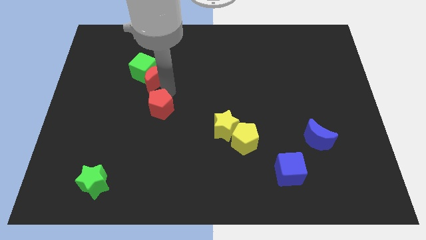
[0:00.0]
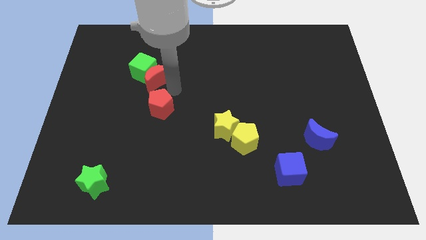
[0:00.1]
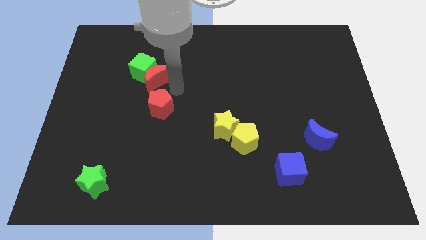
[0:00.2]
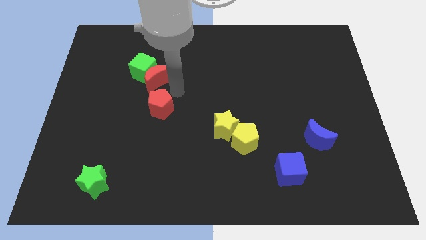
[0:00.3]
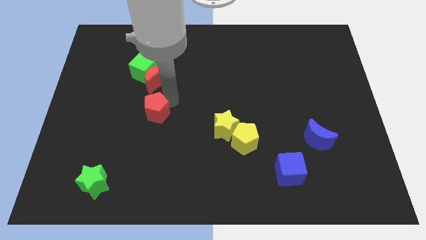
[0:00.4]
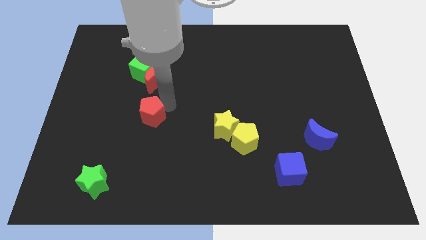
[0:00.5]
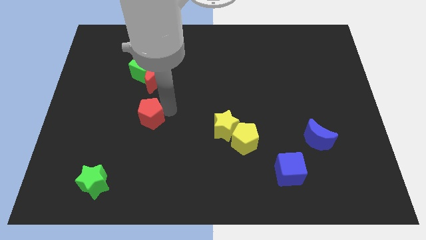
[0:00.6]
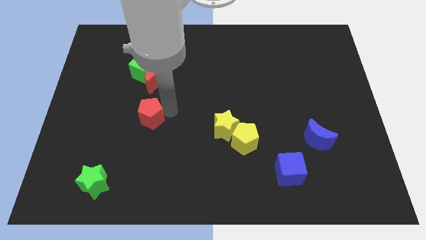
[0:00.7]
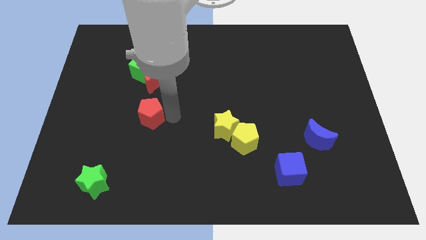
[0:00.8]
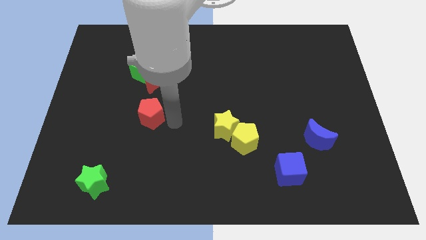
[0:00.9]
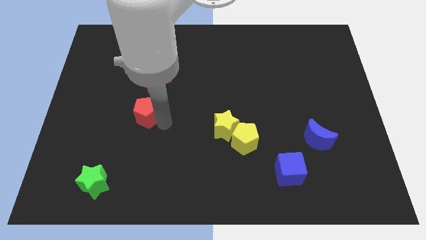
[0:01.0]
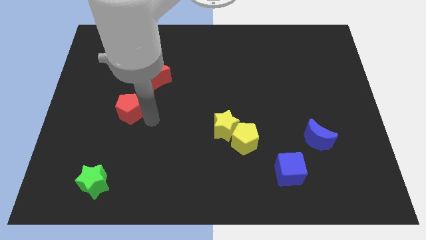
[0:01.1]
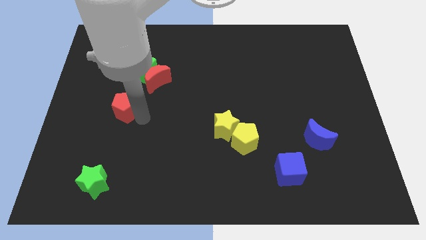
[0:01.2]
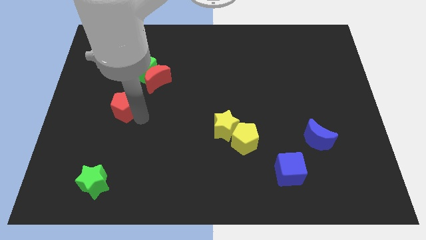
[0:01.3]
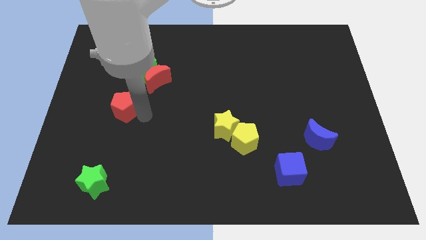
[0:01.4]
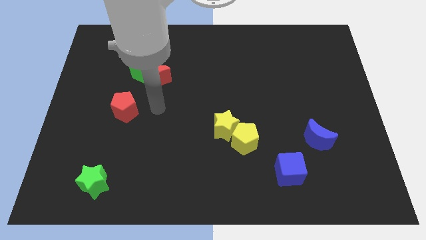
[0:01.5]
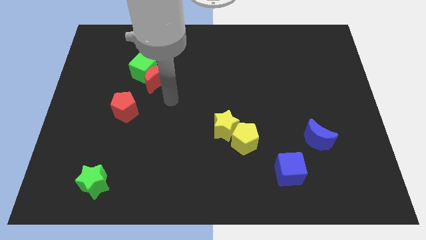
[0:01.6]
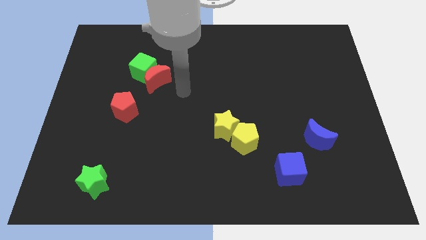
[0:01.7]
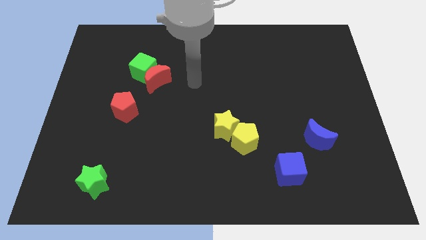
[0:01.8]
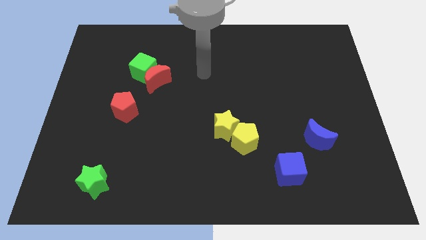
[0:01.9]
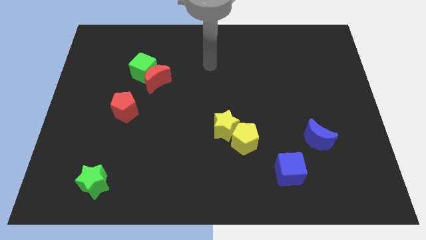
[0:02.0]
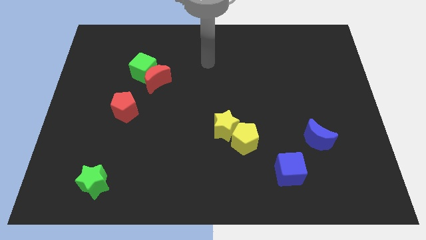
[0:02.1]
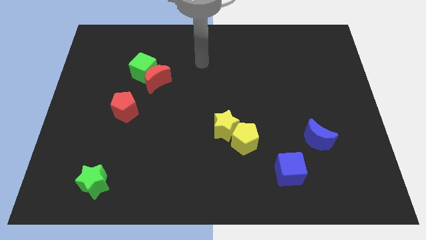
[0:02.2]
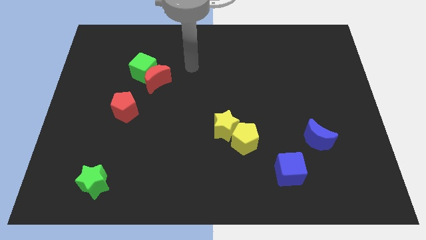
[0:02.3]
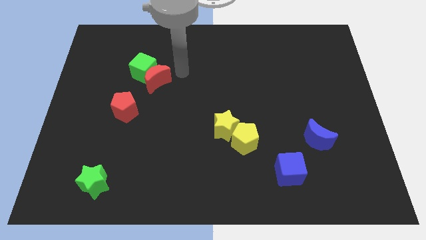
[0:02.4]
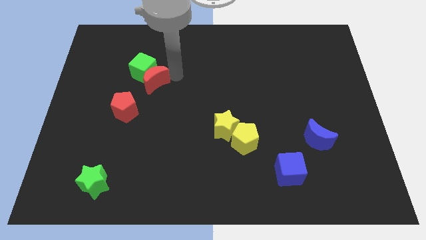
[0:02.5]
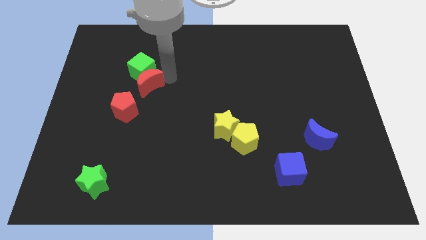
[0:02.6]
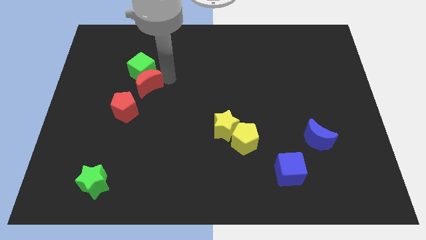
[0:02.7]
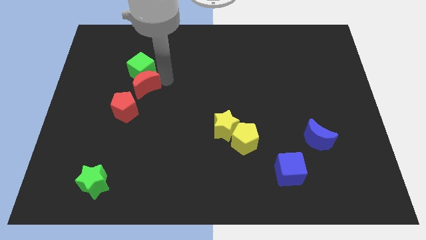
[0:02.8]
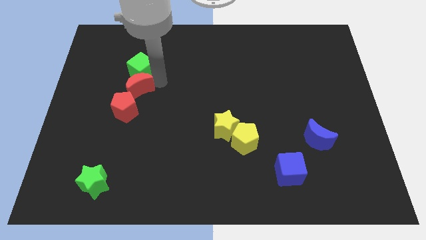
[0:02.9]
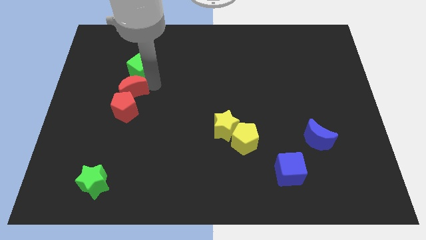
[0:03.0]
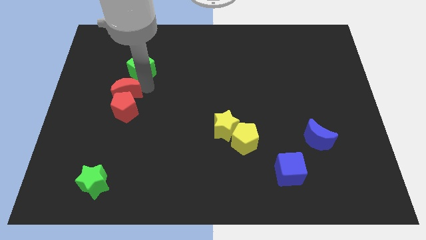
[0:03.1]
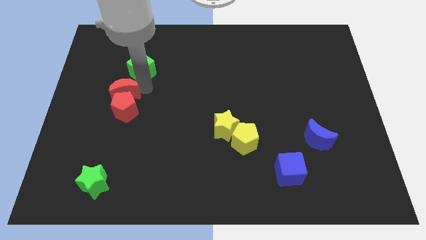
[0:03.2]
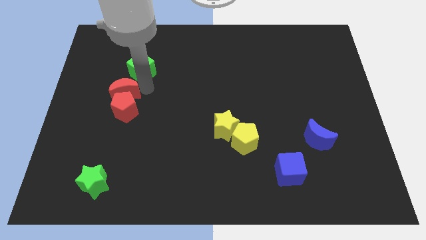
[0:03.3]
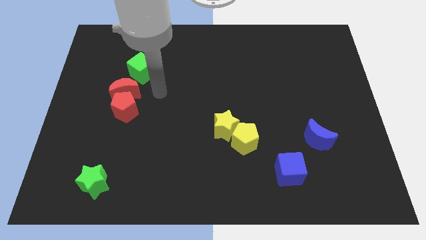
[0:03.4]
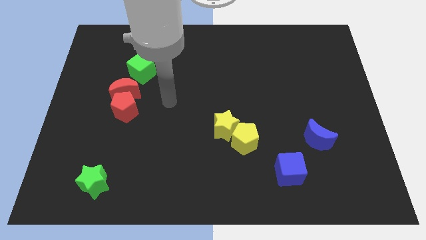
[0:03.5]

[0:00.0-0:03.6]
move the red blocks towards the left side of the board

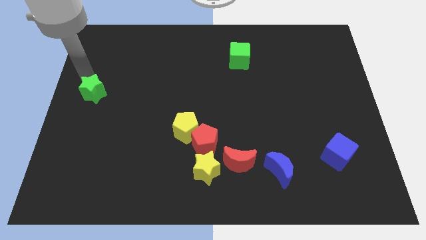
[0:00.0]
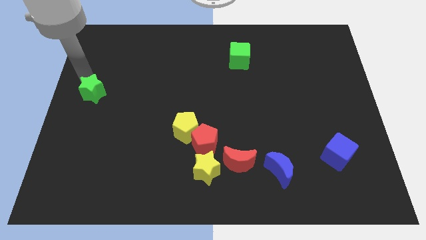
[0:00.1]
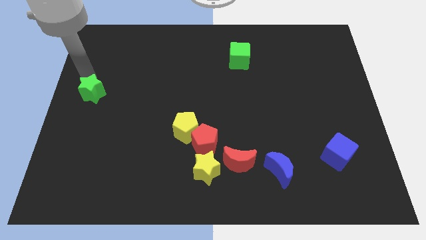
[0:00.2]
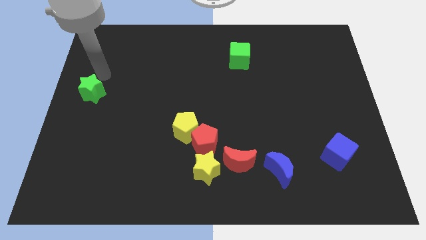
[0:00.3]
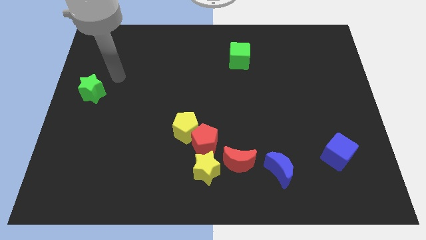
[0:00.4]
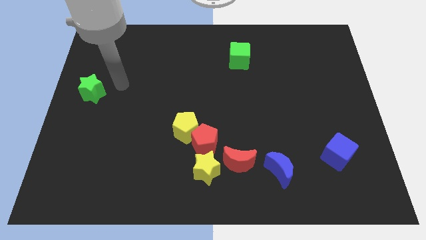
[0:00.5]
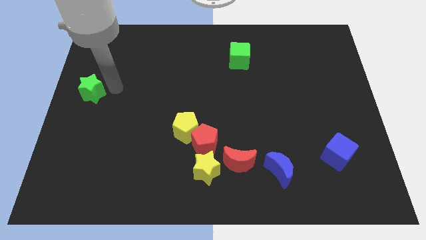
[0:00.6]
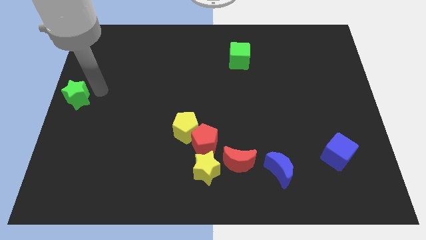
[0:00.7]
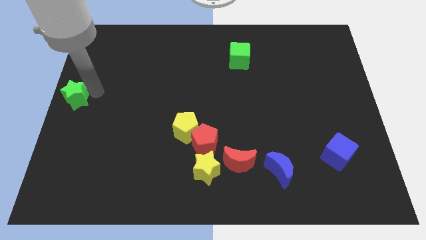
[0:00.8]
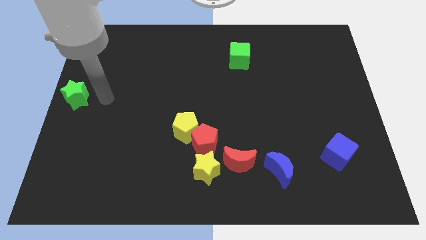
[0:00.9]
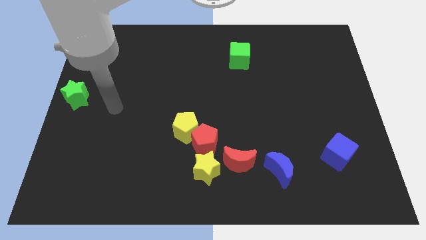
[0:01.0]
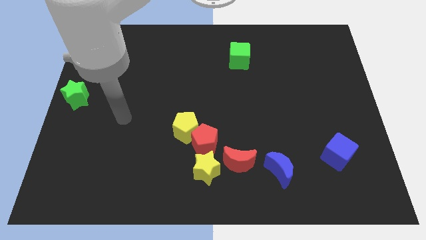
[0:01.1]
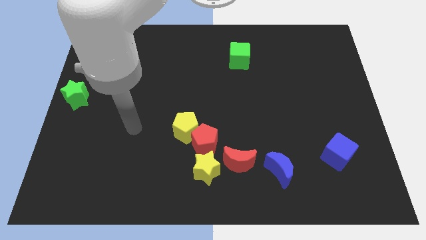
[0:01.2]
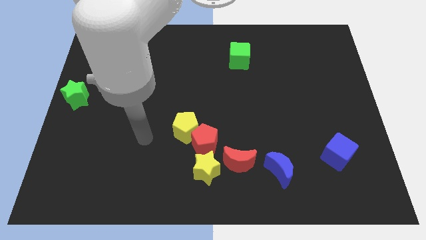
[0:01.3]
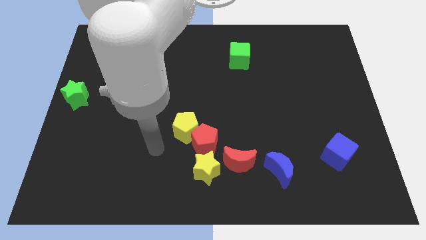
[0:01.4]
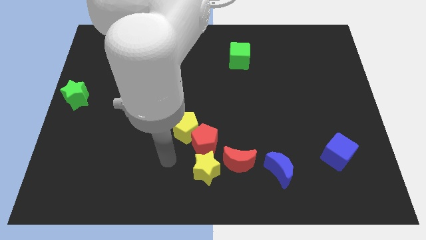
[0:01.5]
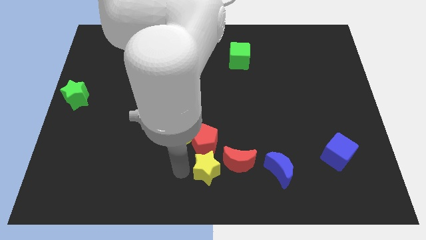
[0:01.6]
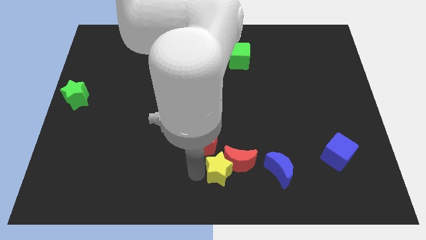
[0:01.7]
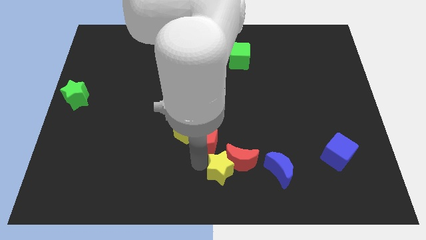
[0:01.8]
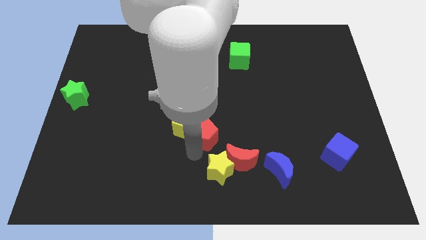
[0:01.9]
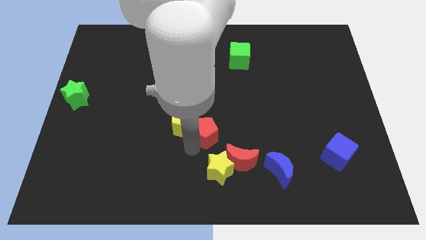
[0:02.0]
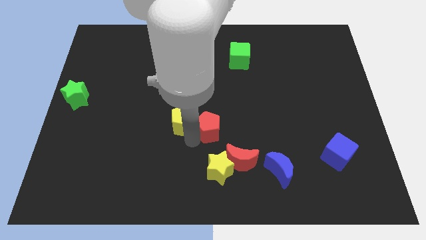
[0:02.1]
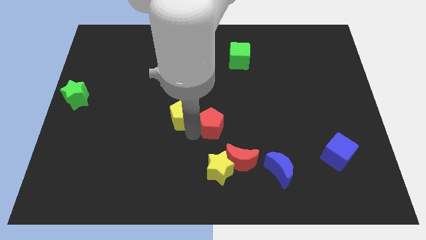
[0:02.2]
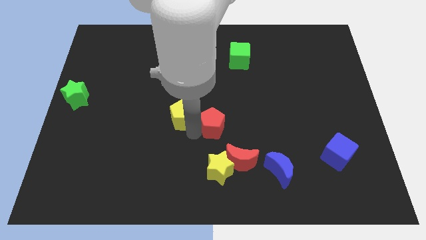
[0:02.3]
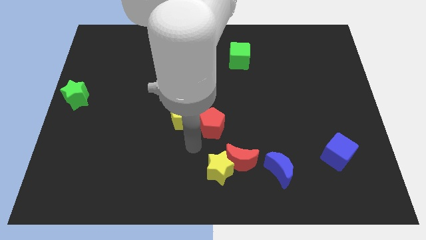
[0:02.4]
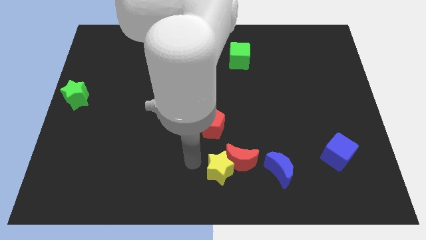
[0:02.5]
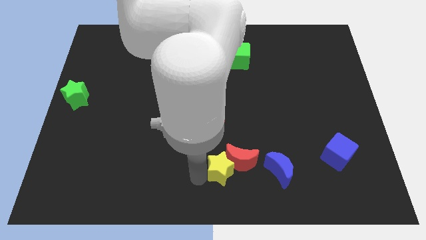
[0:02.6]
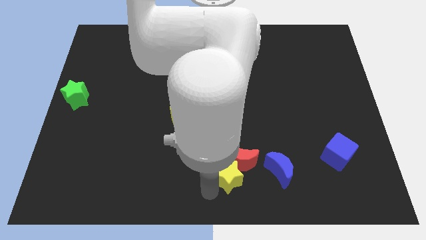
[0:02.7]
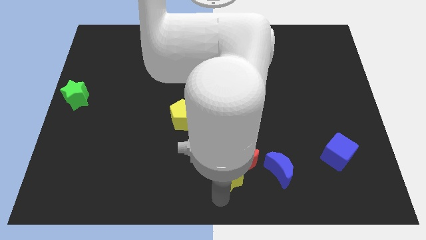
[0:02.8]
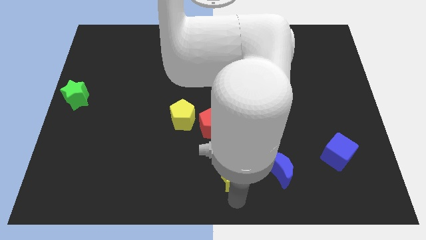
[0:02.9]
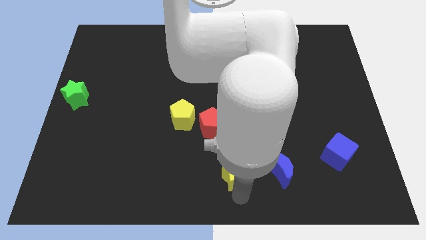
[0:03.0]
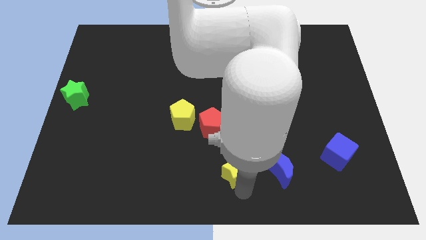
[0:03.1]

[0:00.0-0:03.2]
move the red pentagon slightly to the center of the board

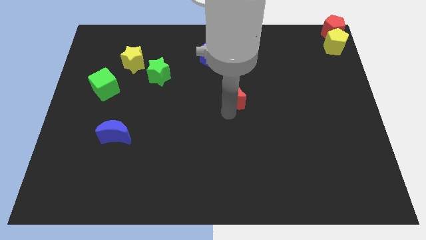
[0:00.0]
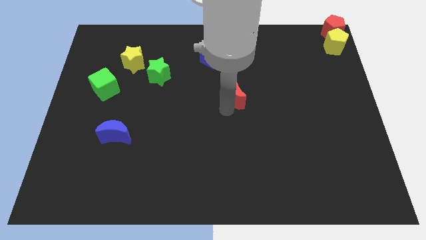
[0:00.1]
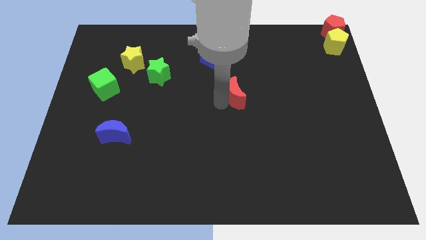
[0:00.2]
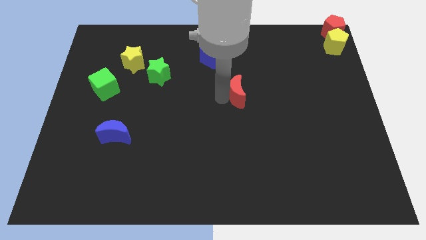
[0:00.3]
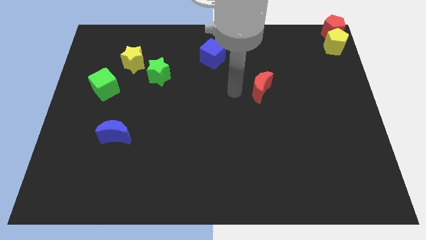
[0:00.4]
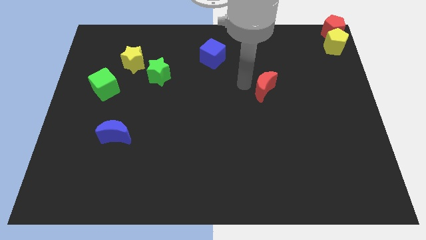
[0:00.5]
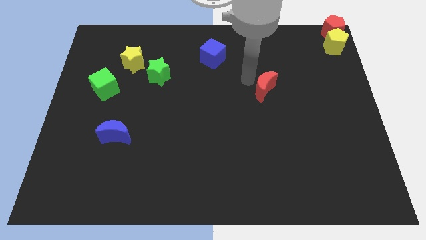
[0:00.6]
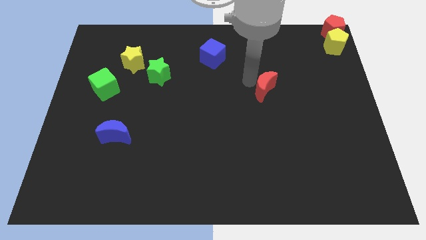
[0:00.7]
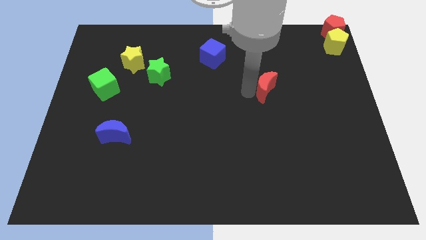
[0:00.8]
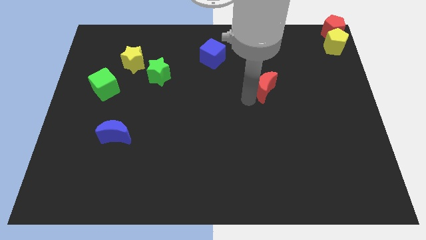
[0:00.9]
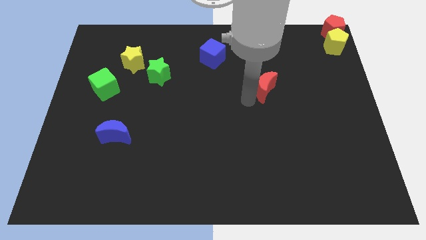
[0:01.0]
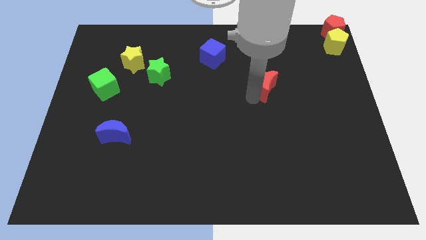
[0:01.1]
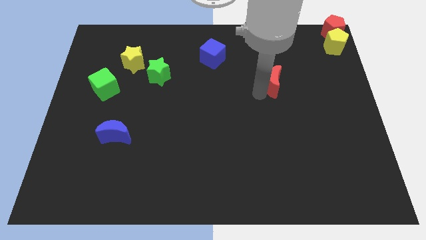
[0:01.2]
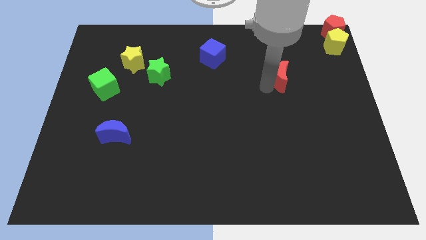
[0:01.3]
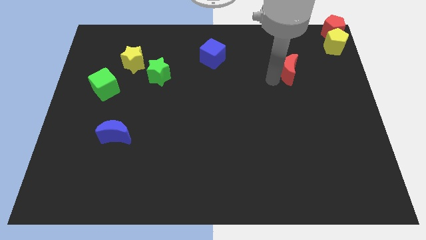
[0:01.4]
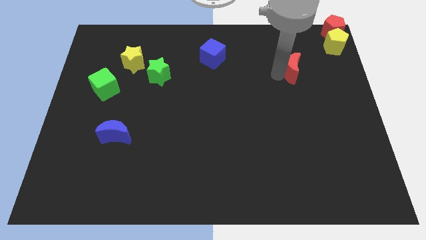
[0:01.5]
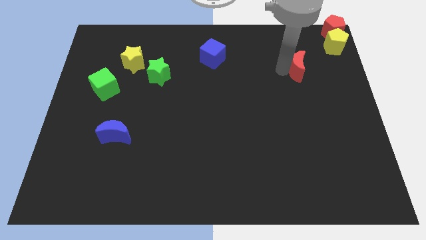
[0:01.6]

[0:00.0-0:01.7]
move the red crescent to the right of the board

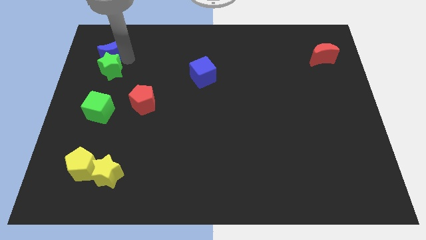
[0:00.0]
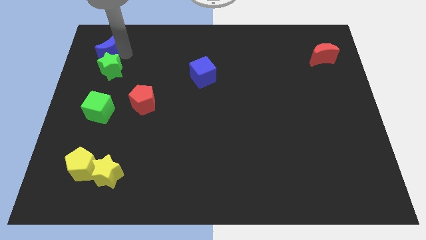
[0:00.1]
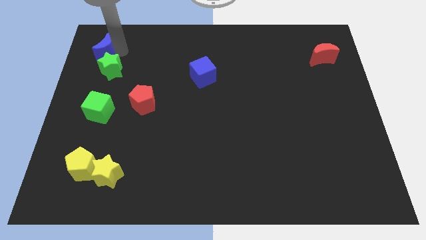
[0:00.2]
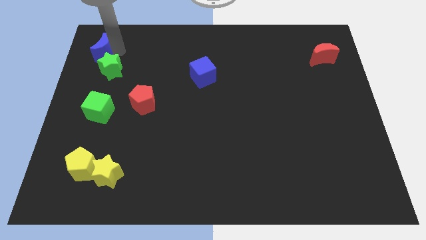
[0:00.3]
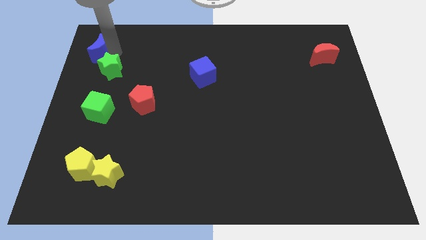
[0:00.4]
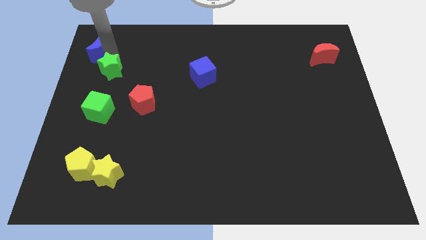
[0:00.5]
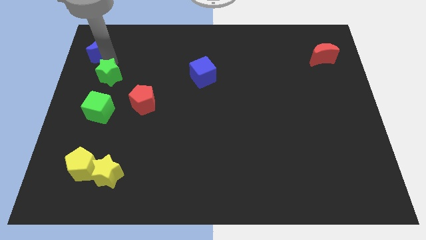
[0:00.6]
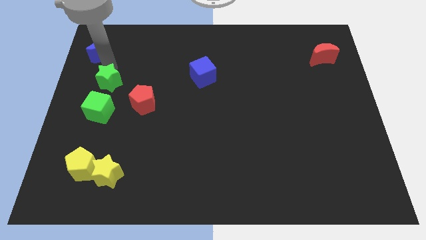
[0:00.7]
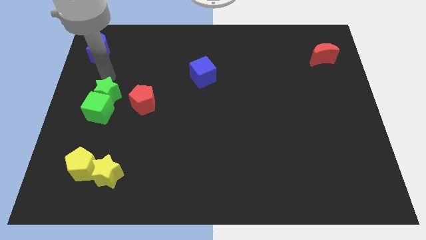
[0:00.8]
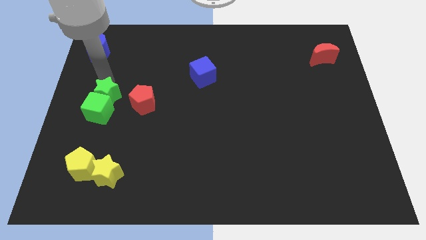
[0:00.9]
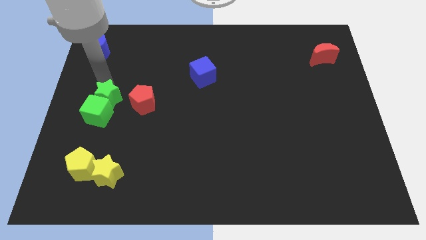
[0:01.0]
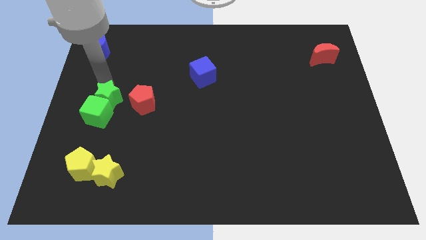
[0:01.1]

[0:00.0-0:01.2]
push green star in to green cube
